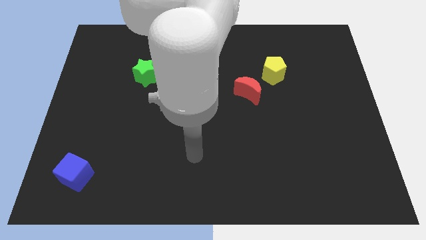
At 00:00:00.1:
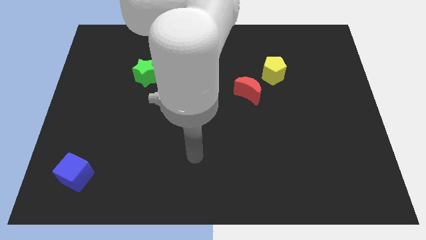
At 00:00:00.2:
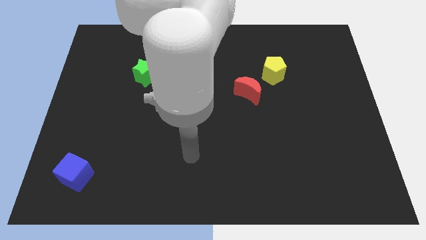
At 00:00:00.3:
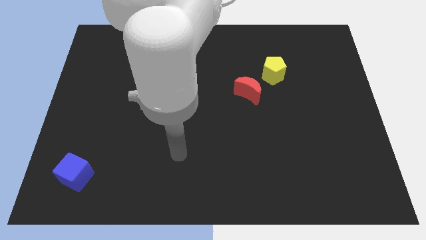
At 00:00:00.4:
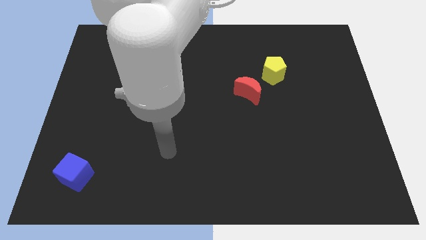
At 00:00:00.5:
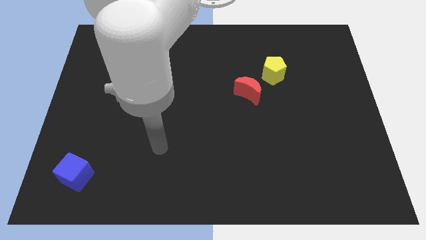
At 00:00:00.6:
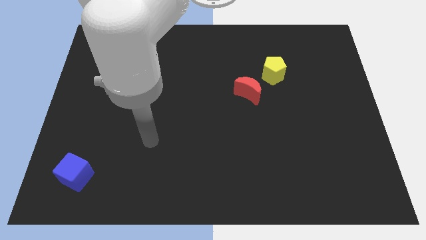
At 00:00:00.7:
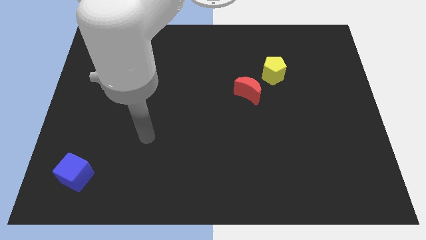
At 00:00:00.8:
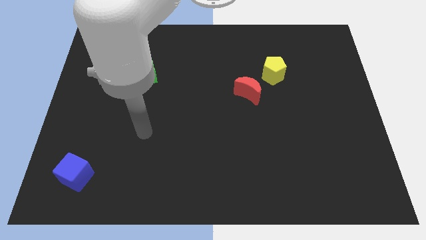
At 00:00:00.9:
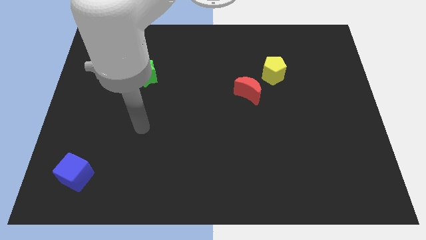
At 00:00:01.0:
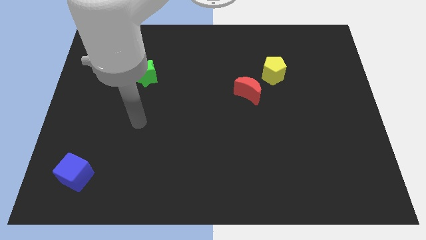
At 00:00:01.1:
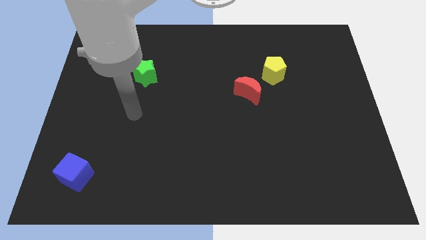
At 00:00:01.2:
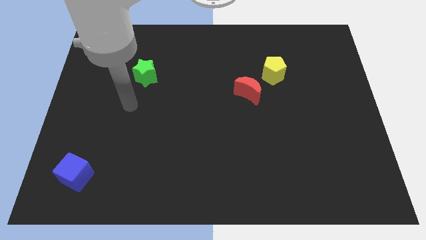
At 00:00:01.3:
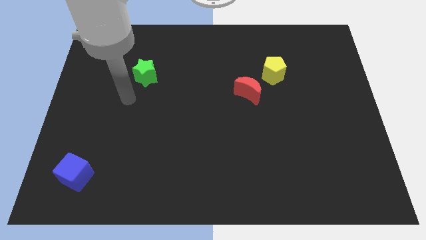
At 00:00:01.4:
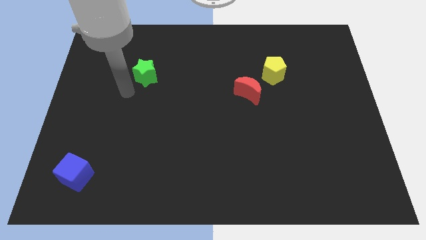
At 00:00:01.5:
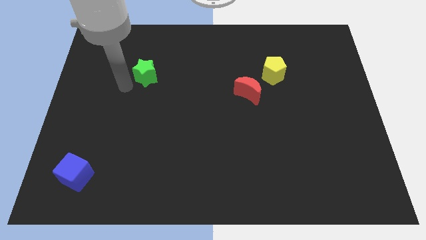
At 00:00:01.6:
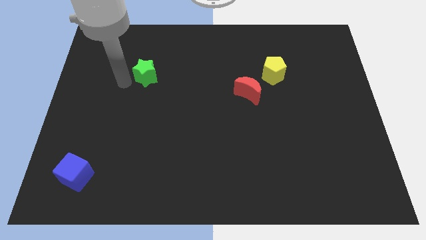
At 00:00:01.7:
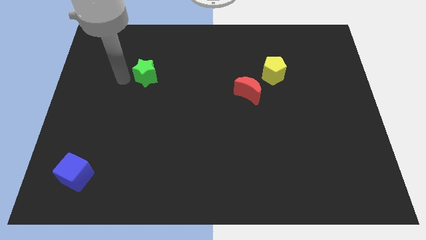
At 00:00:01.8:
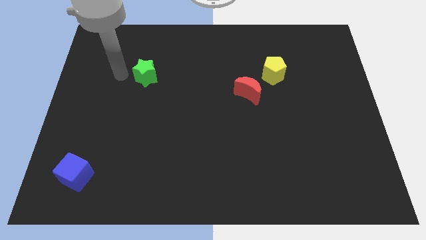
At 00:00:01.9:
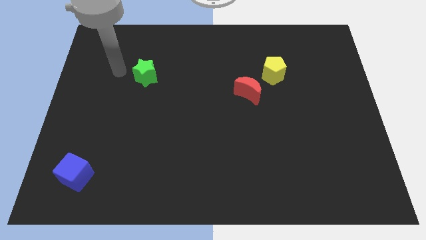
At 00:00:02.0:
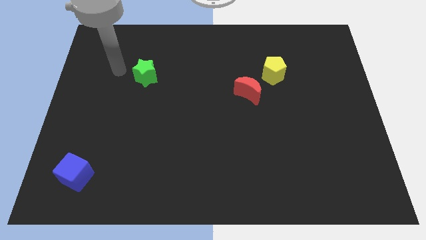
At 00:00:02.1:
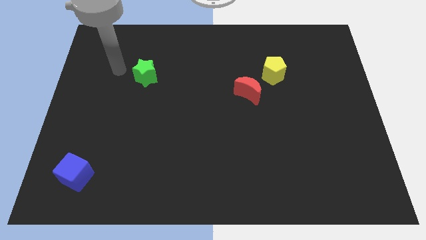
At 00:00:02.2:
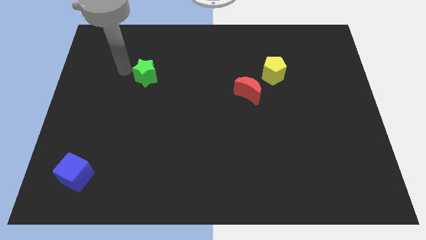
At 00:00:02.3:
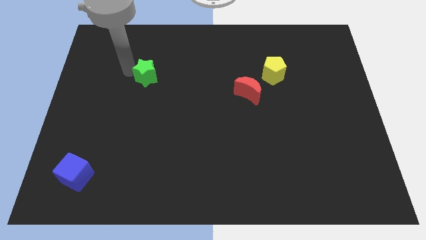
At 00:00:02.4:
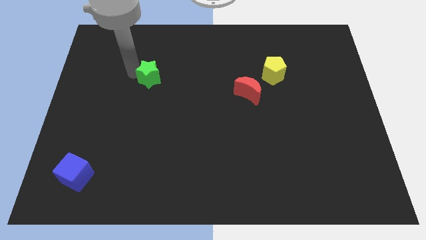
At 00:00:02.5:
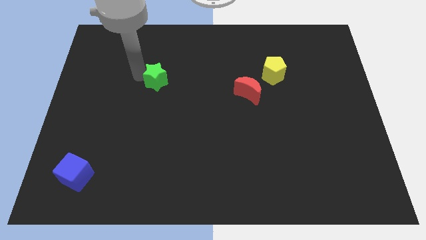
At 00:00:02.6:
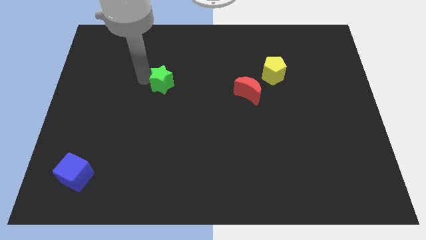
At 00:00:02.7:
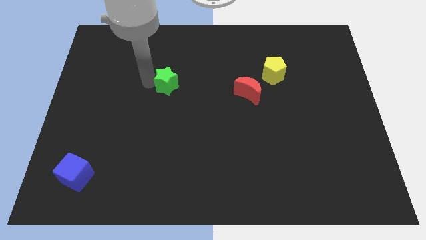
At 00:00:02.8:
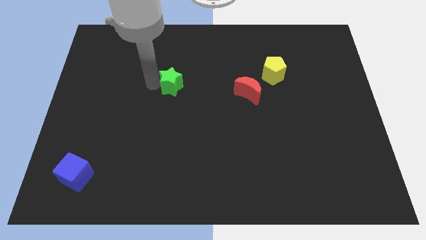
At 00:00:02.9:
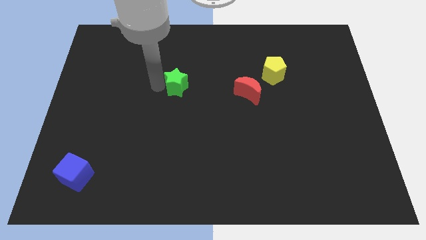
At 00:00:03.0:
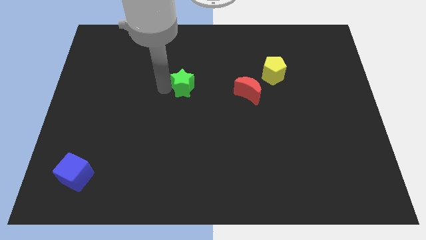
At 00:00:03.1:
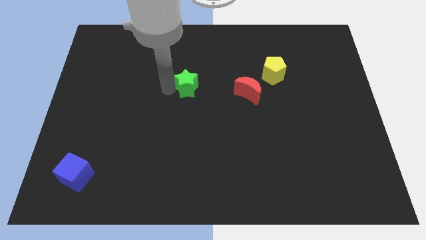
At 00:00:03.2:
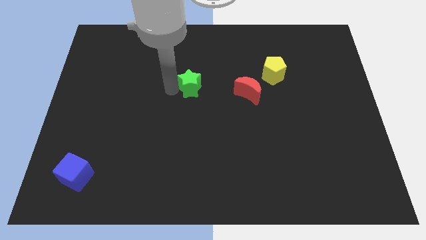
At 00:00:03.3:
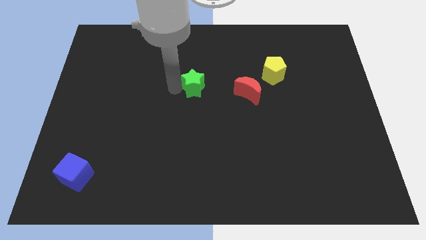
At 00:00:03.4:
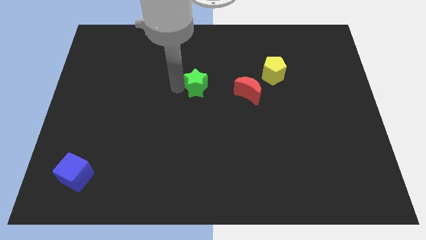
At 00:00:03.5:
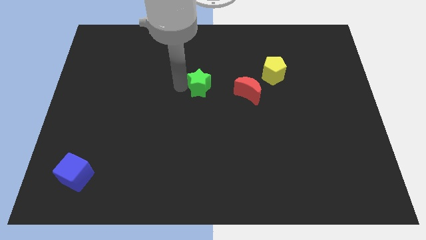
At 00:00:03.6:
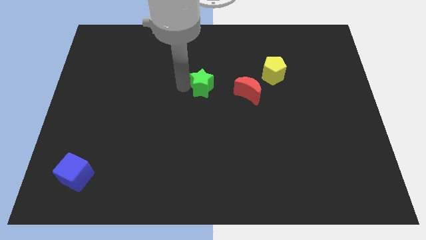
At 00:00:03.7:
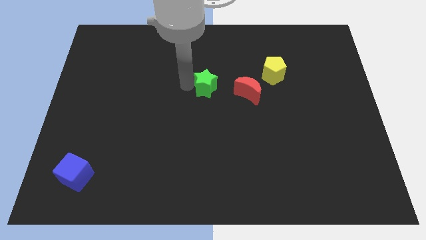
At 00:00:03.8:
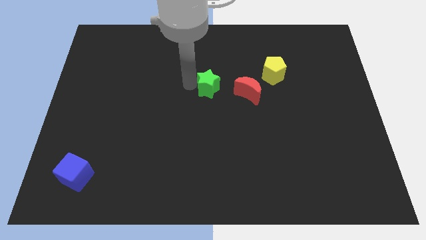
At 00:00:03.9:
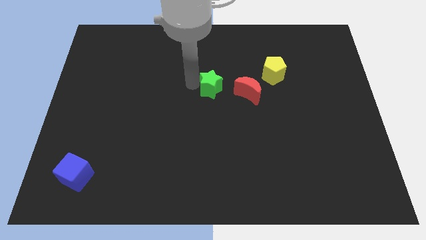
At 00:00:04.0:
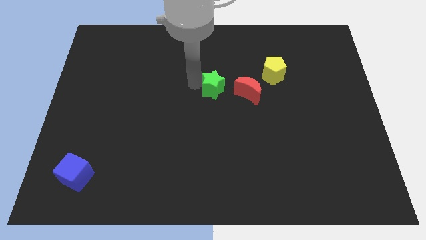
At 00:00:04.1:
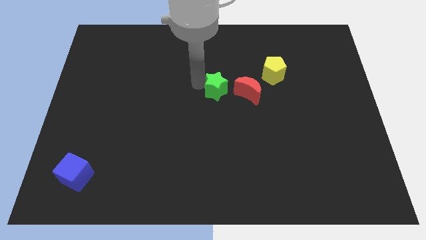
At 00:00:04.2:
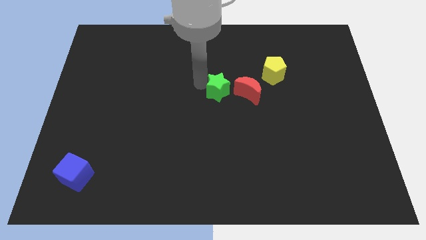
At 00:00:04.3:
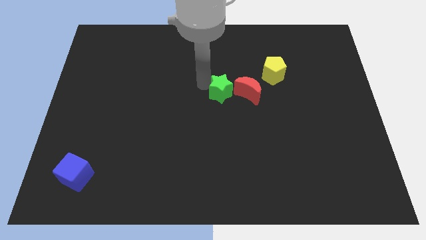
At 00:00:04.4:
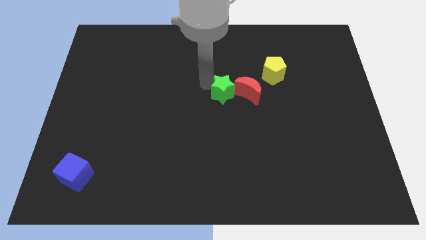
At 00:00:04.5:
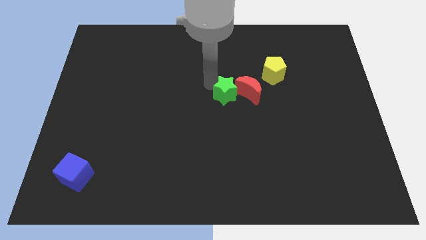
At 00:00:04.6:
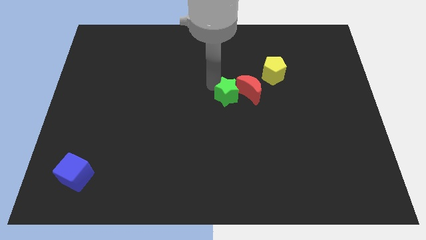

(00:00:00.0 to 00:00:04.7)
slide the star towards the red block

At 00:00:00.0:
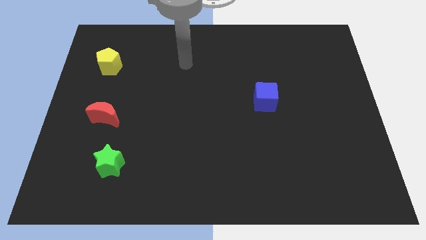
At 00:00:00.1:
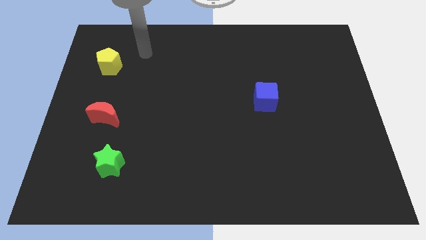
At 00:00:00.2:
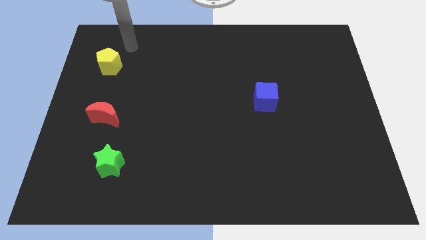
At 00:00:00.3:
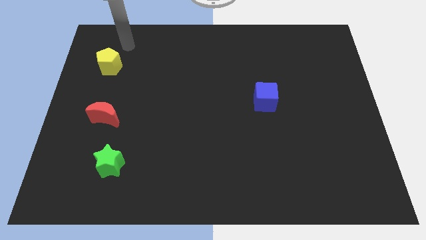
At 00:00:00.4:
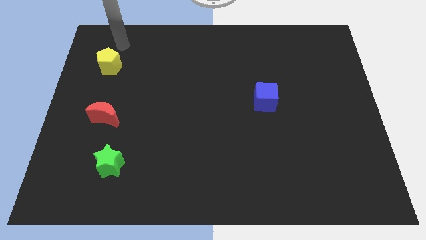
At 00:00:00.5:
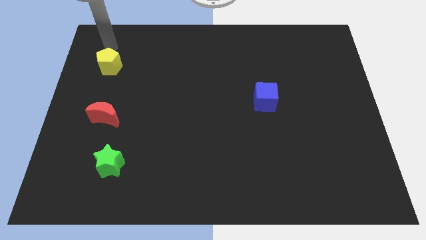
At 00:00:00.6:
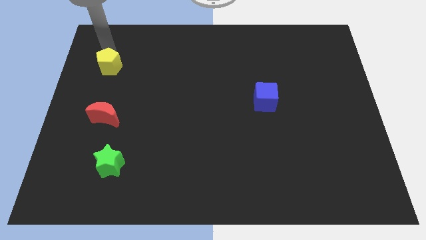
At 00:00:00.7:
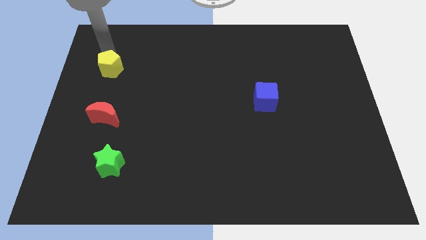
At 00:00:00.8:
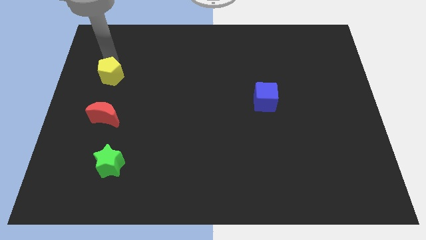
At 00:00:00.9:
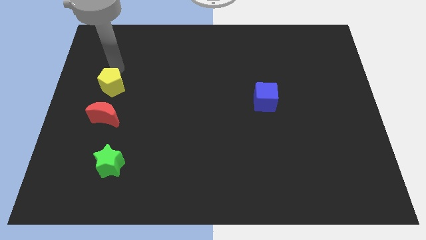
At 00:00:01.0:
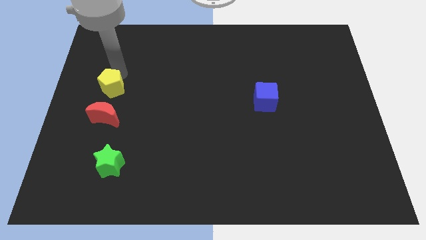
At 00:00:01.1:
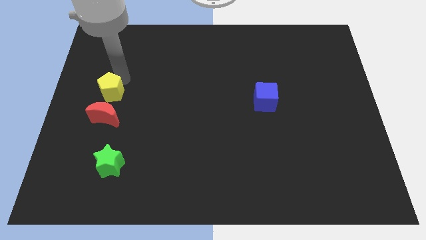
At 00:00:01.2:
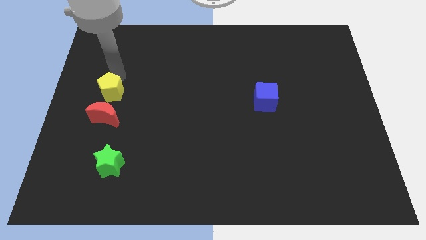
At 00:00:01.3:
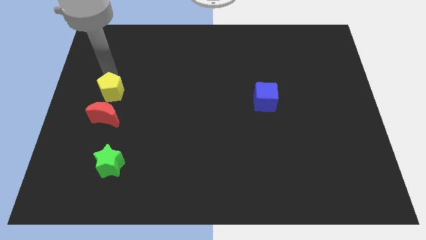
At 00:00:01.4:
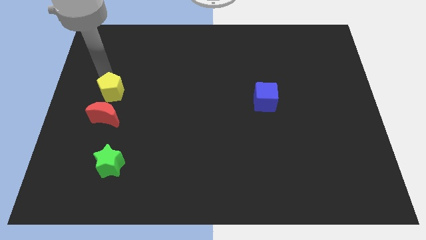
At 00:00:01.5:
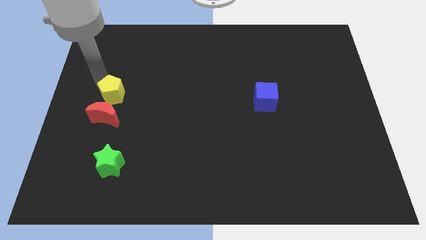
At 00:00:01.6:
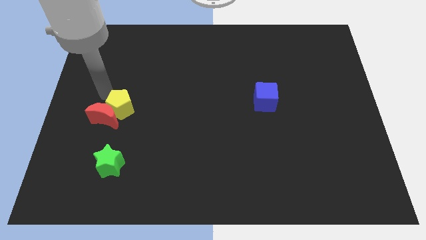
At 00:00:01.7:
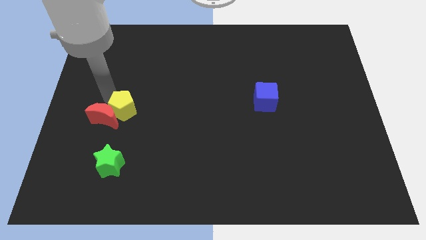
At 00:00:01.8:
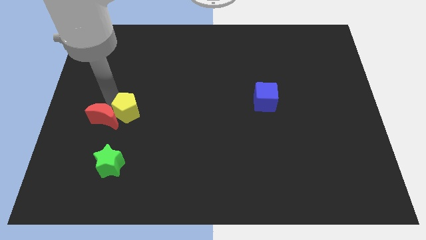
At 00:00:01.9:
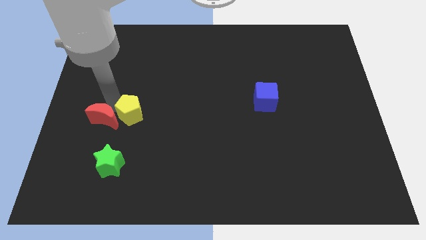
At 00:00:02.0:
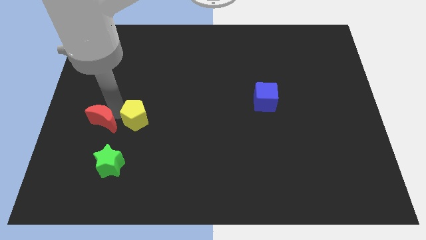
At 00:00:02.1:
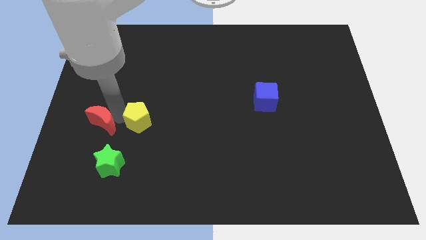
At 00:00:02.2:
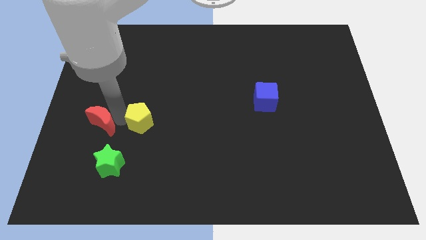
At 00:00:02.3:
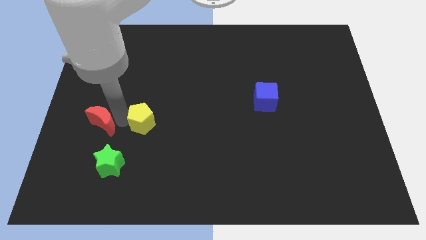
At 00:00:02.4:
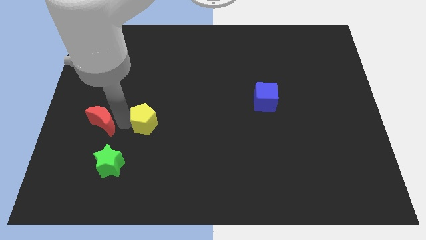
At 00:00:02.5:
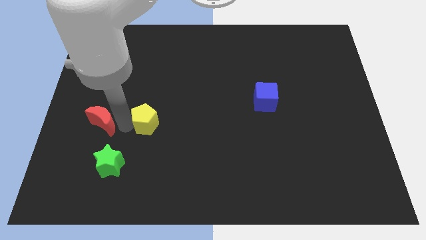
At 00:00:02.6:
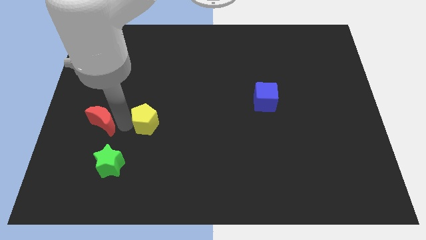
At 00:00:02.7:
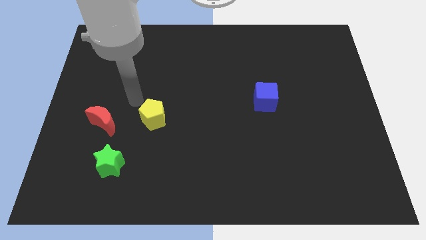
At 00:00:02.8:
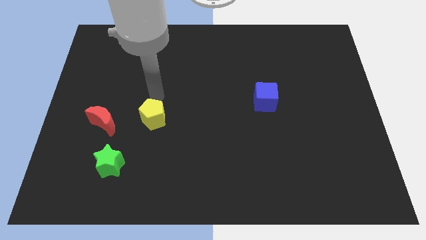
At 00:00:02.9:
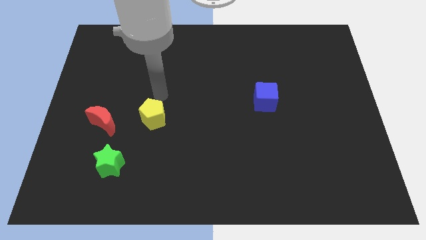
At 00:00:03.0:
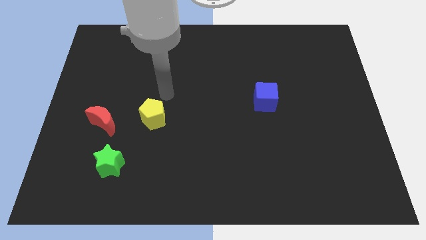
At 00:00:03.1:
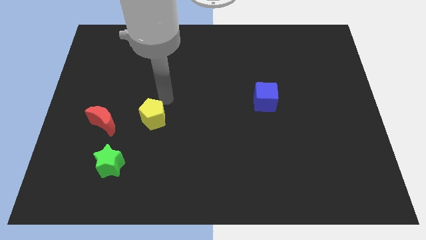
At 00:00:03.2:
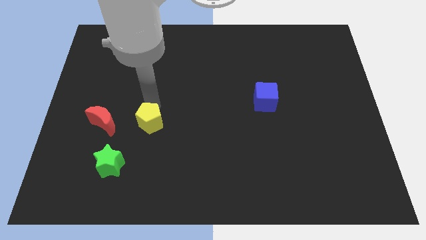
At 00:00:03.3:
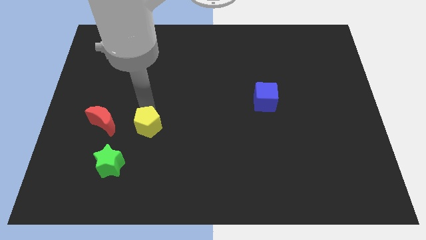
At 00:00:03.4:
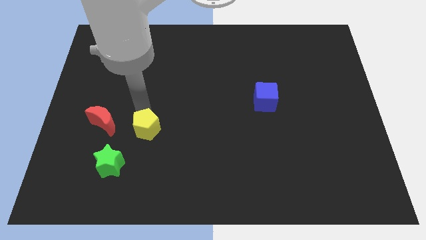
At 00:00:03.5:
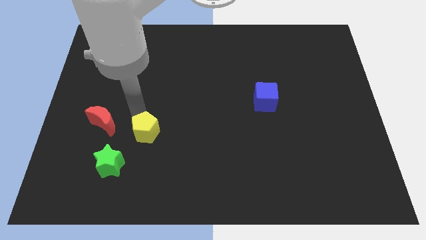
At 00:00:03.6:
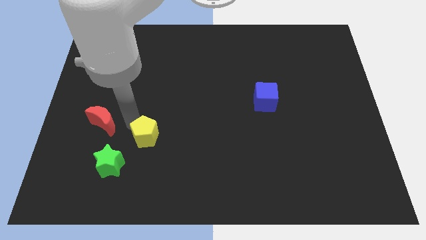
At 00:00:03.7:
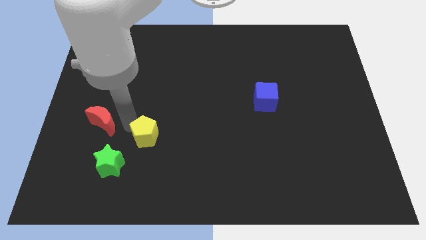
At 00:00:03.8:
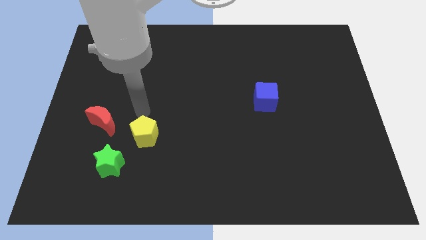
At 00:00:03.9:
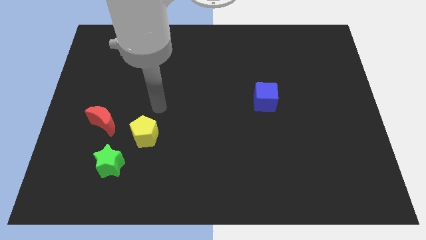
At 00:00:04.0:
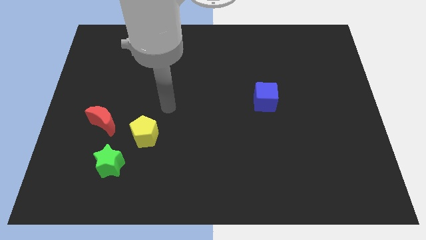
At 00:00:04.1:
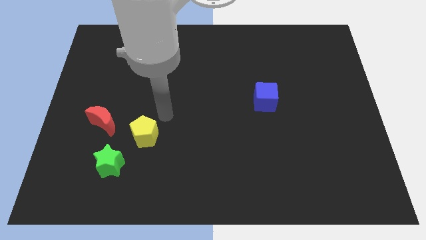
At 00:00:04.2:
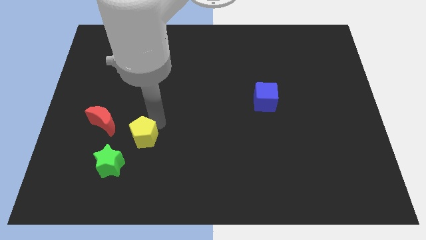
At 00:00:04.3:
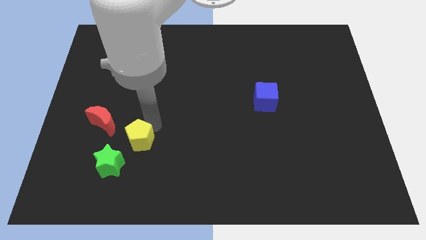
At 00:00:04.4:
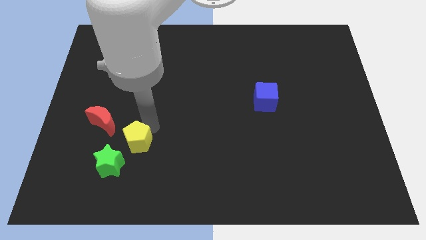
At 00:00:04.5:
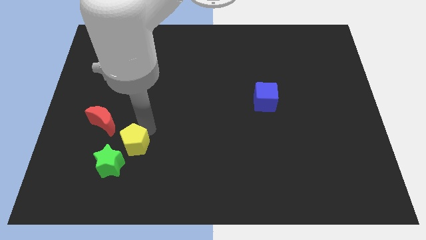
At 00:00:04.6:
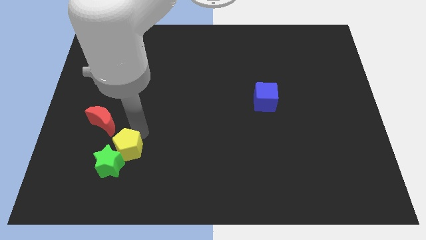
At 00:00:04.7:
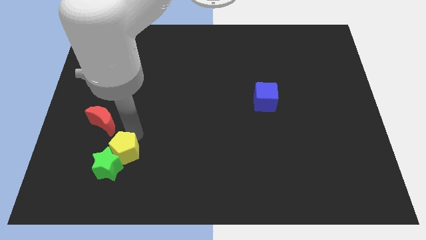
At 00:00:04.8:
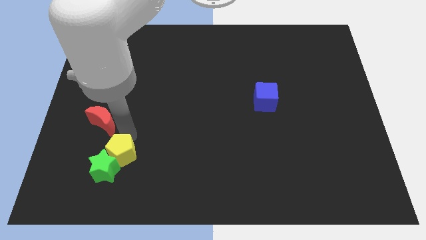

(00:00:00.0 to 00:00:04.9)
push the yellow pentagon close to the green star
